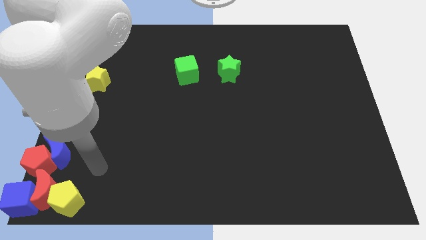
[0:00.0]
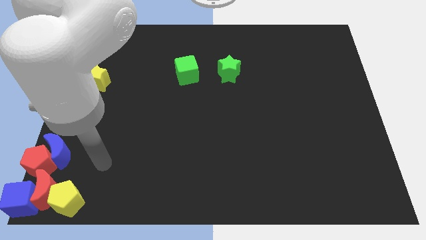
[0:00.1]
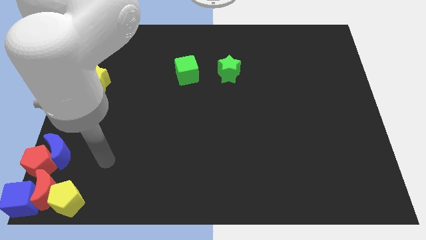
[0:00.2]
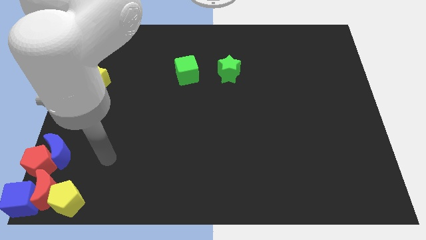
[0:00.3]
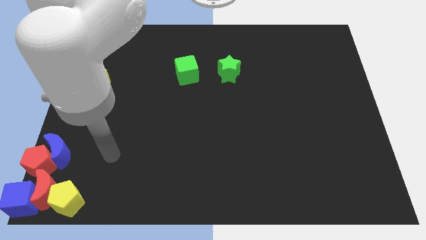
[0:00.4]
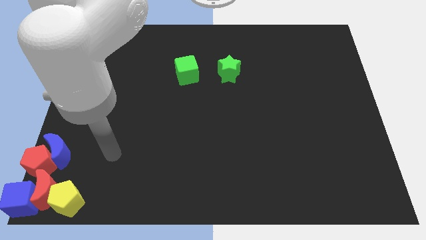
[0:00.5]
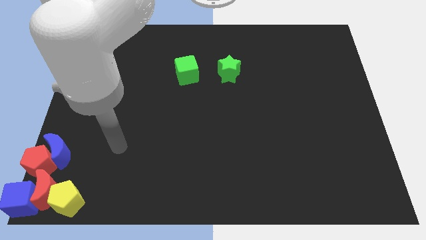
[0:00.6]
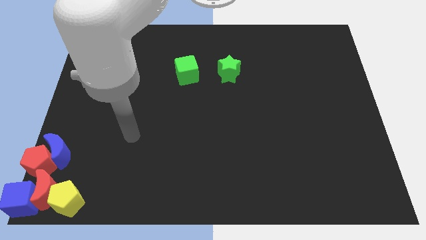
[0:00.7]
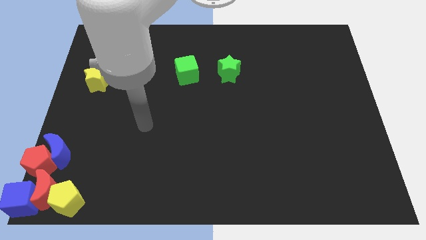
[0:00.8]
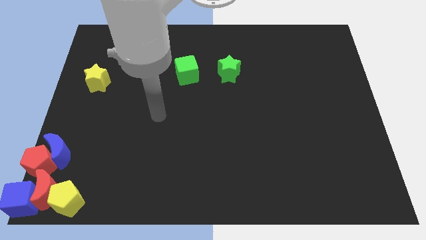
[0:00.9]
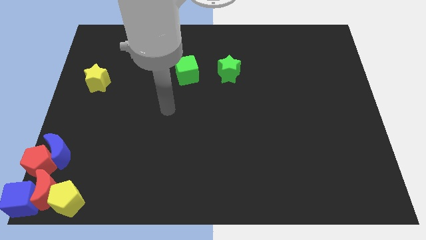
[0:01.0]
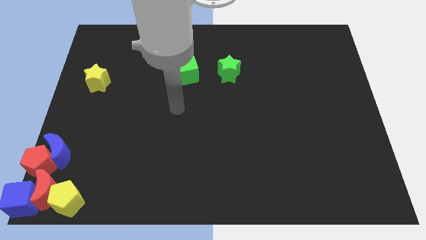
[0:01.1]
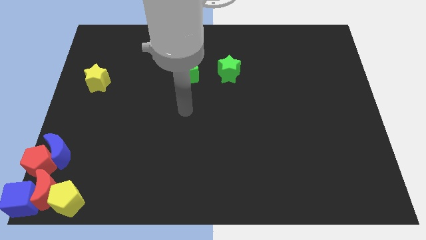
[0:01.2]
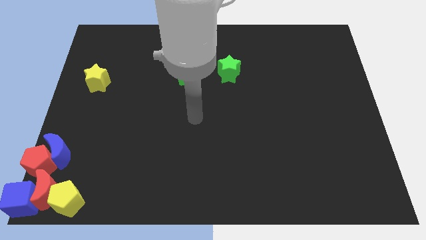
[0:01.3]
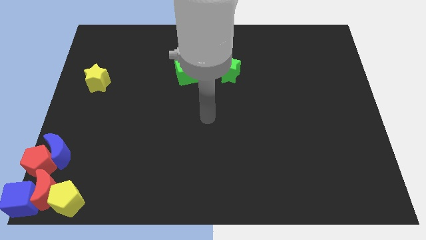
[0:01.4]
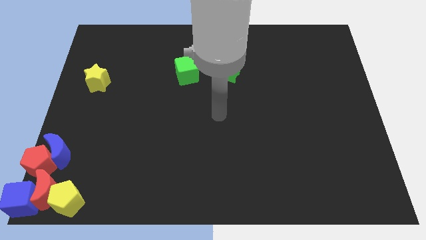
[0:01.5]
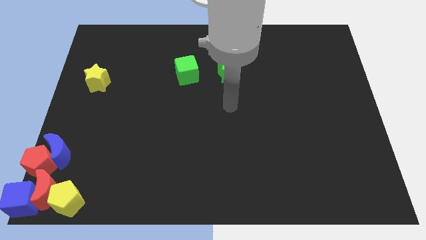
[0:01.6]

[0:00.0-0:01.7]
move your arm to the bottom of the green star

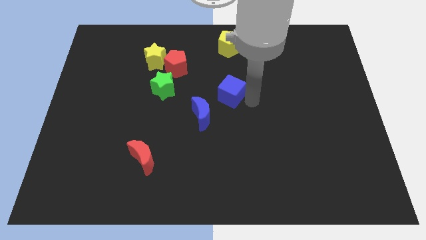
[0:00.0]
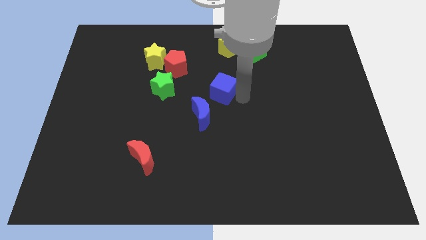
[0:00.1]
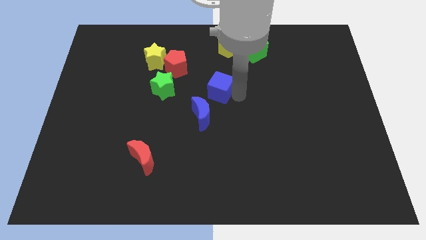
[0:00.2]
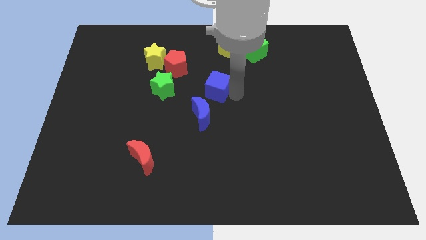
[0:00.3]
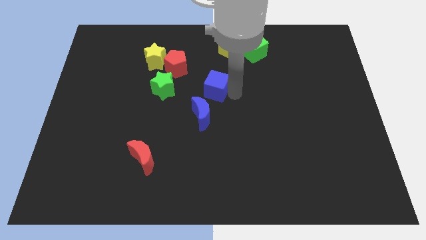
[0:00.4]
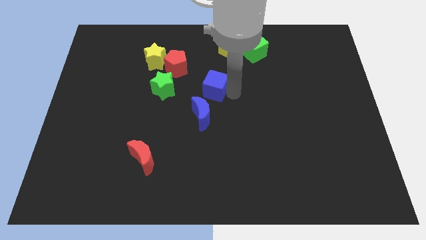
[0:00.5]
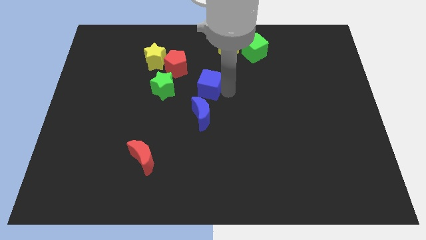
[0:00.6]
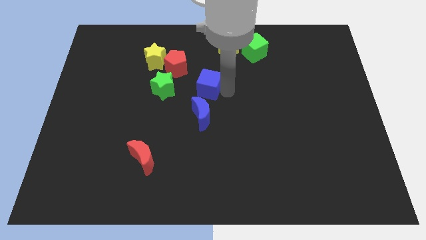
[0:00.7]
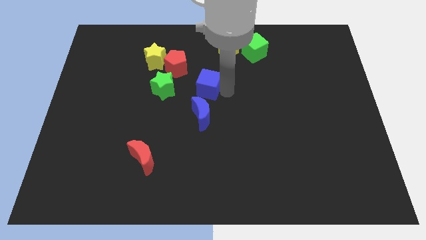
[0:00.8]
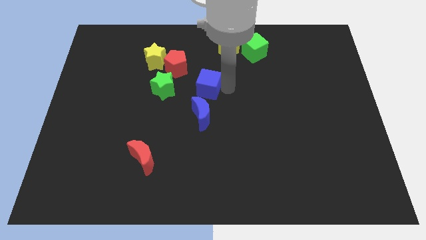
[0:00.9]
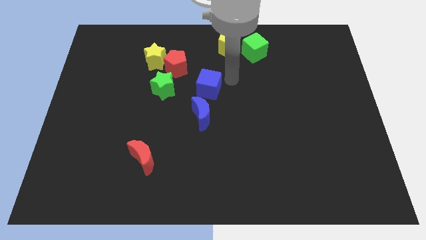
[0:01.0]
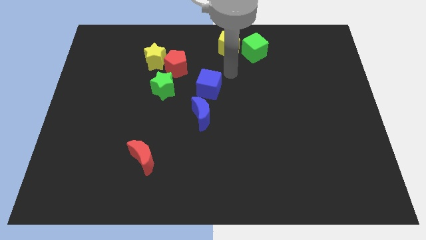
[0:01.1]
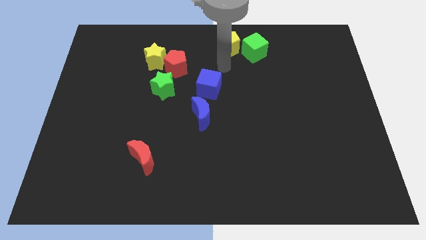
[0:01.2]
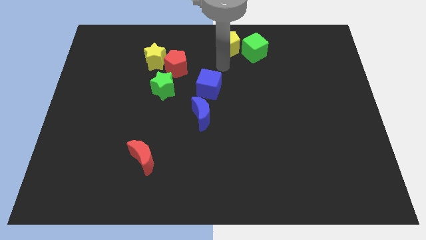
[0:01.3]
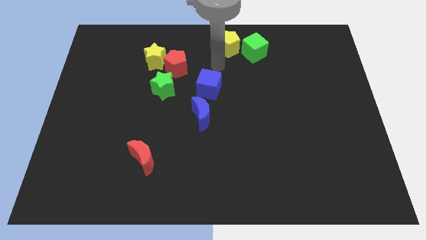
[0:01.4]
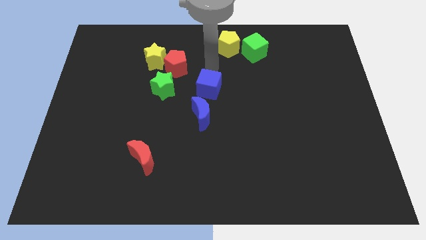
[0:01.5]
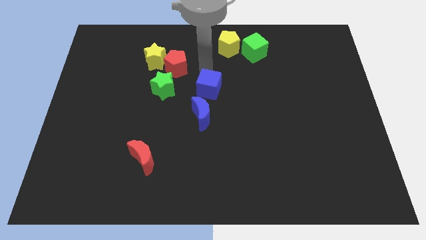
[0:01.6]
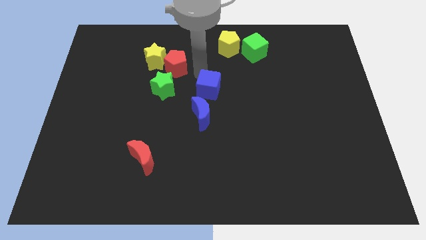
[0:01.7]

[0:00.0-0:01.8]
push blue cube above blue crescent

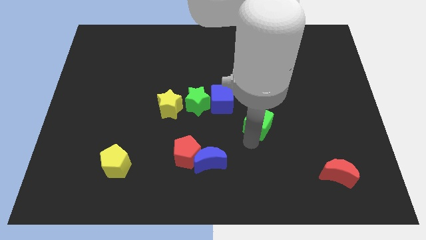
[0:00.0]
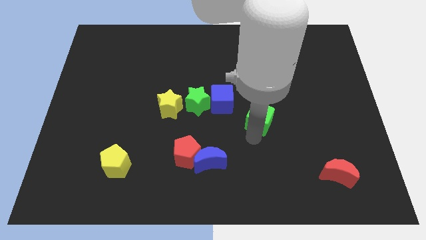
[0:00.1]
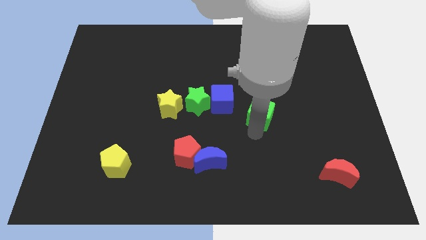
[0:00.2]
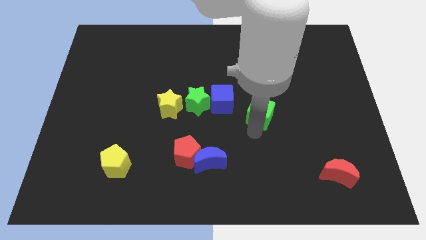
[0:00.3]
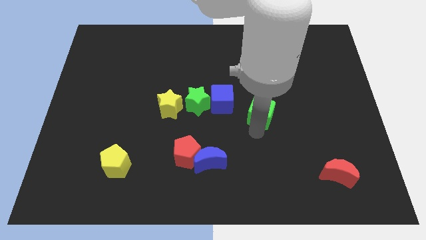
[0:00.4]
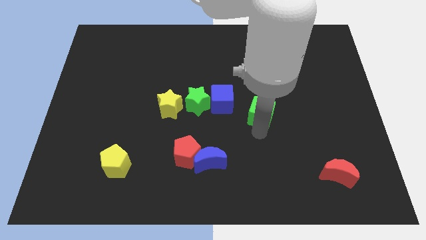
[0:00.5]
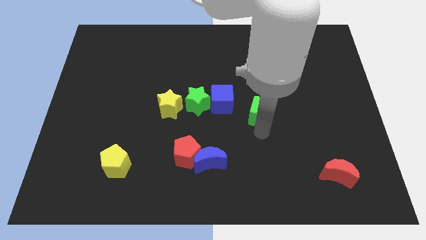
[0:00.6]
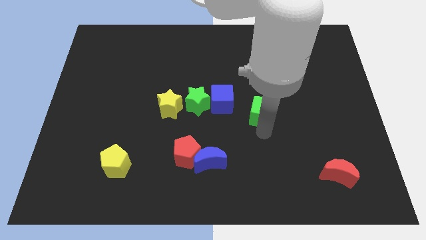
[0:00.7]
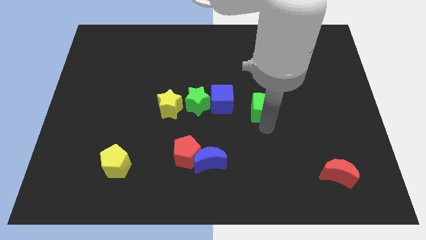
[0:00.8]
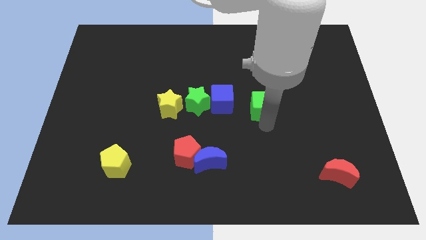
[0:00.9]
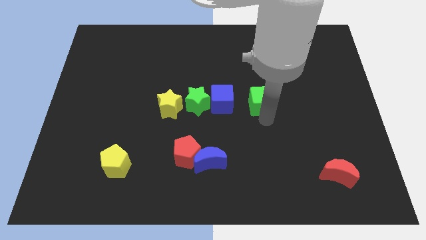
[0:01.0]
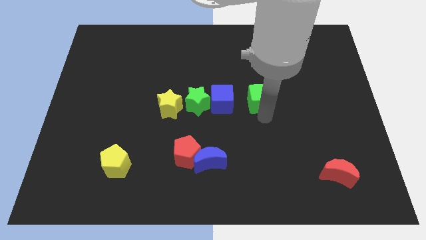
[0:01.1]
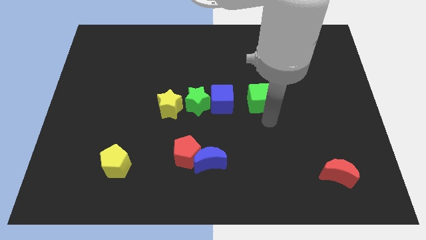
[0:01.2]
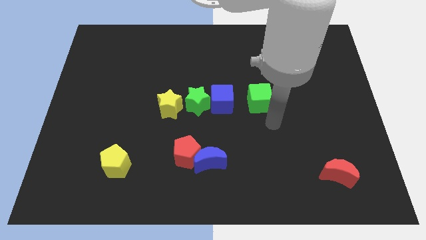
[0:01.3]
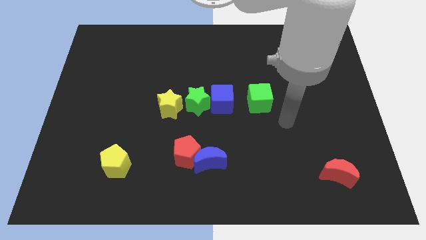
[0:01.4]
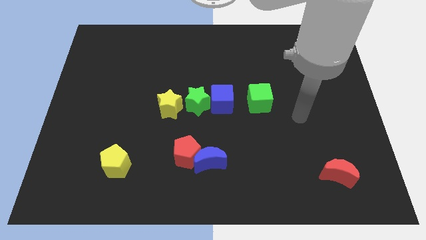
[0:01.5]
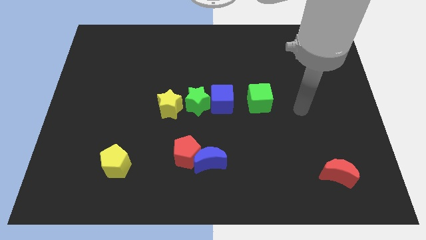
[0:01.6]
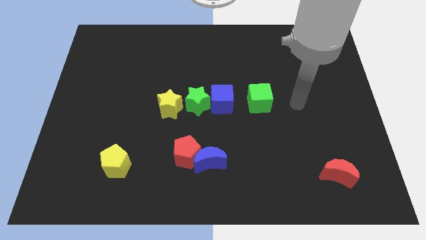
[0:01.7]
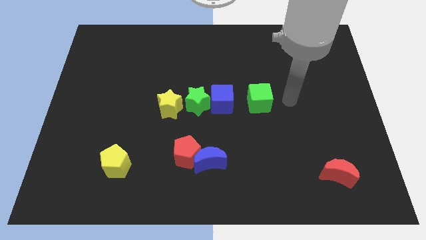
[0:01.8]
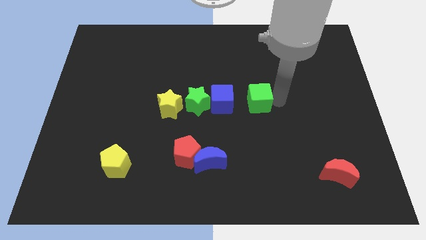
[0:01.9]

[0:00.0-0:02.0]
move the green cube to the right of the blue cube

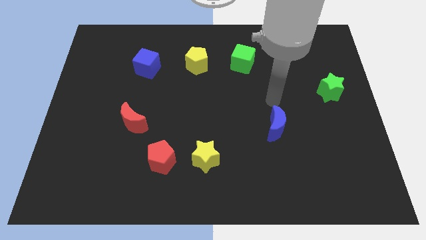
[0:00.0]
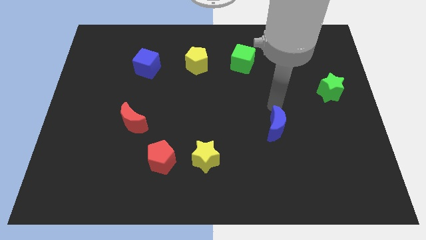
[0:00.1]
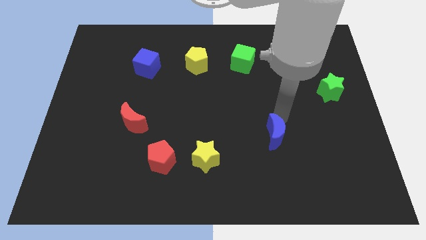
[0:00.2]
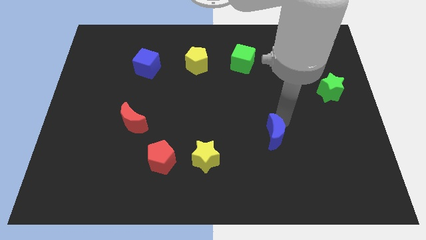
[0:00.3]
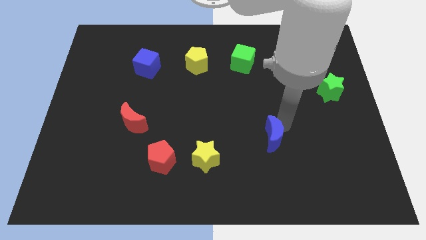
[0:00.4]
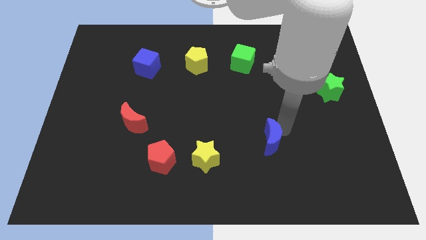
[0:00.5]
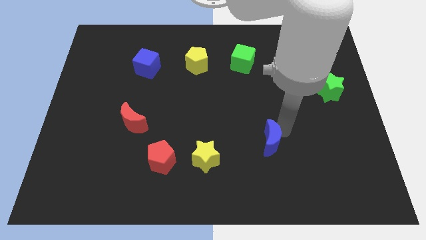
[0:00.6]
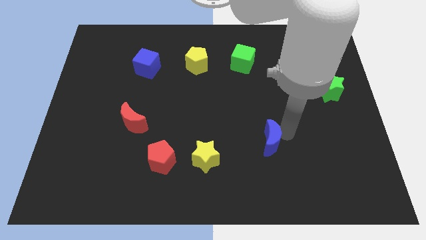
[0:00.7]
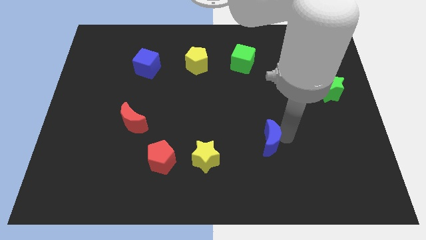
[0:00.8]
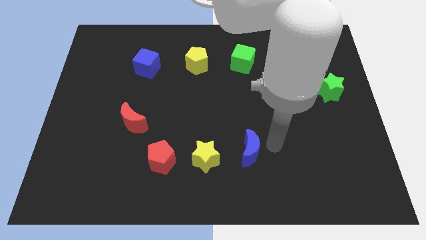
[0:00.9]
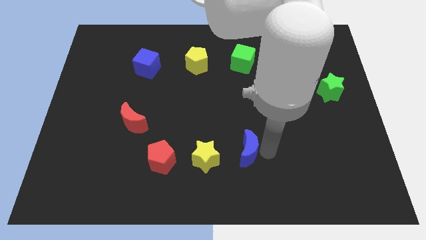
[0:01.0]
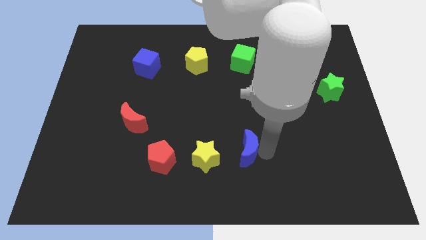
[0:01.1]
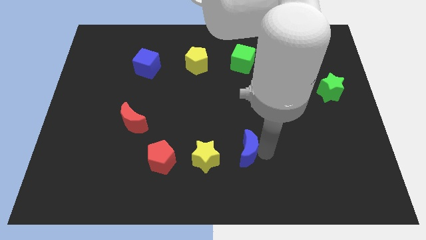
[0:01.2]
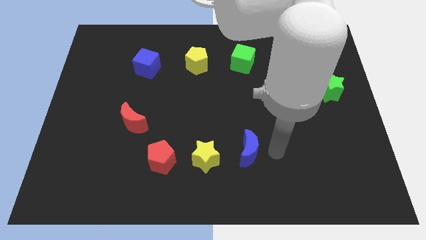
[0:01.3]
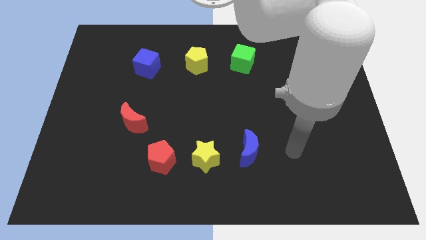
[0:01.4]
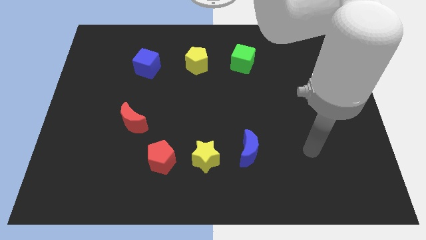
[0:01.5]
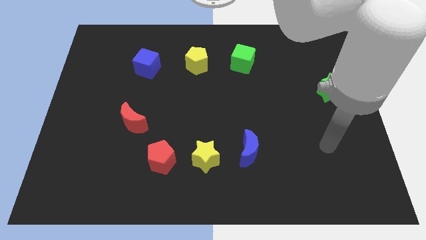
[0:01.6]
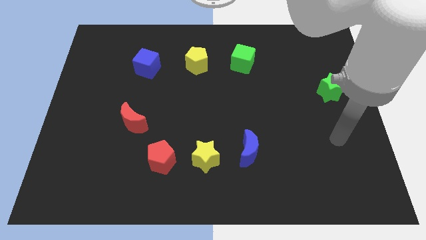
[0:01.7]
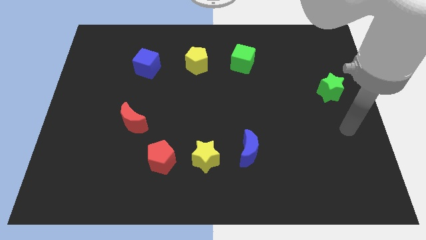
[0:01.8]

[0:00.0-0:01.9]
move the blue crescent close to the yellow star

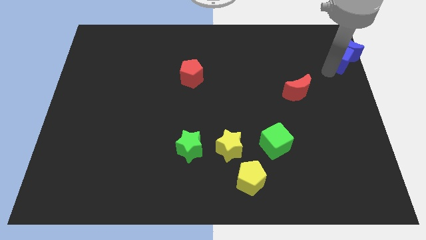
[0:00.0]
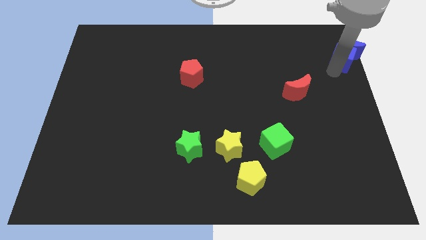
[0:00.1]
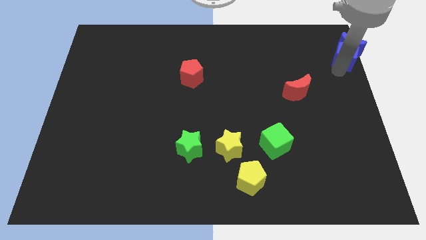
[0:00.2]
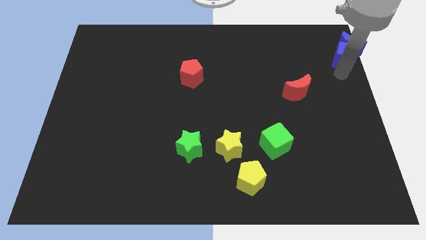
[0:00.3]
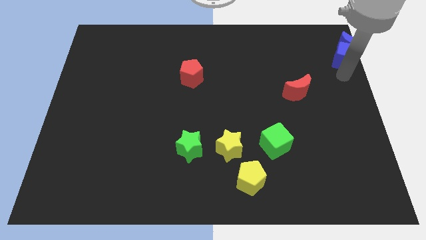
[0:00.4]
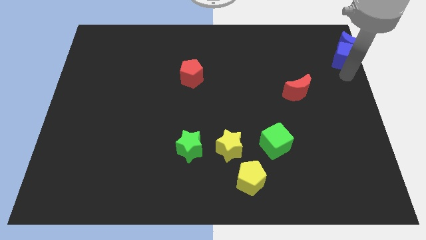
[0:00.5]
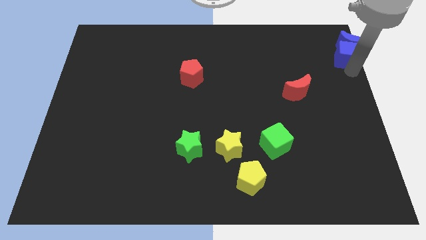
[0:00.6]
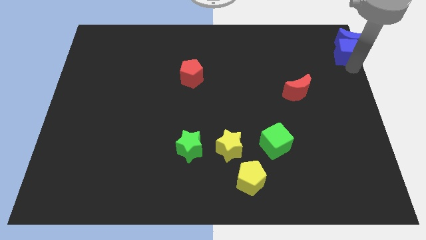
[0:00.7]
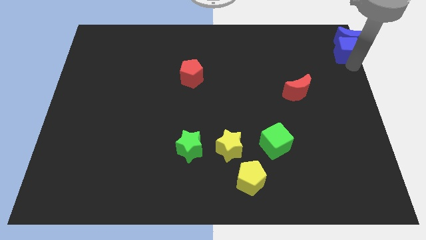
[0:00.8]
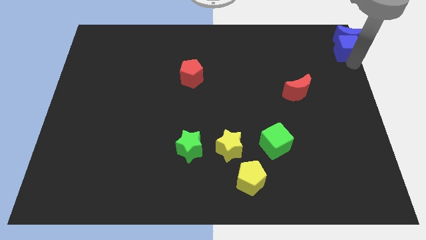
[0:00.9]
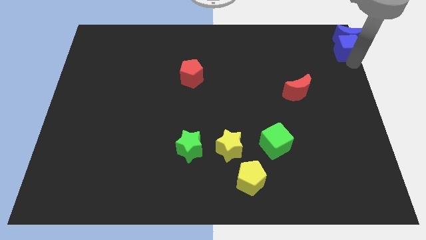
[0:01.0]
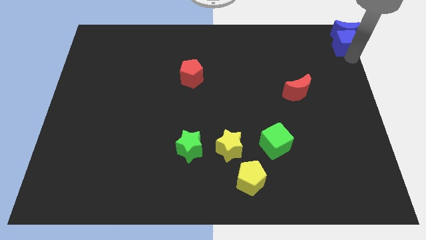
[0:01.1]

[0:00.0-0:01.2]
move blue blocks to top right corner

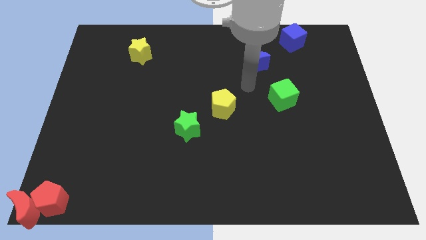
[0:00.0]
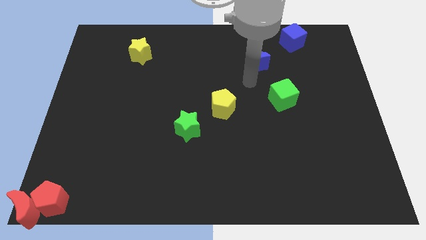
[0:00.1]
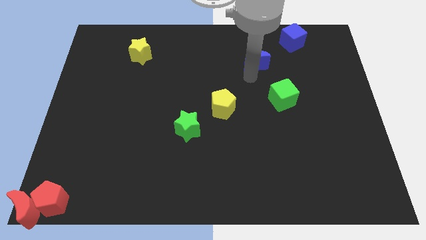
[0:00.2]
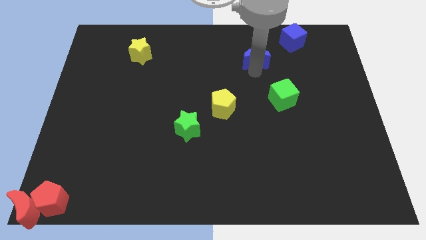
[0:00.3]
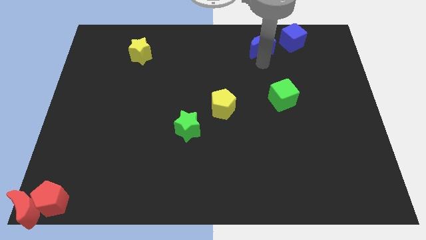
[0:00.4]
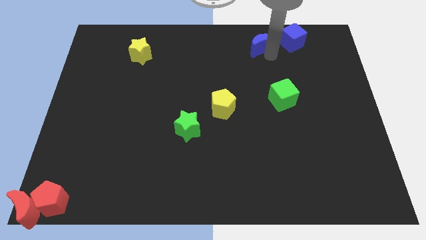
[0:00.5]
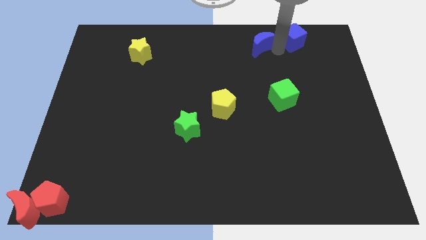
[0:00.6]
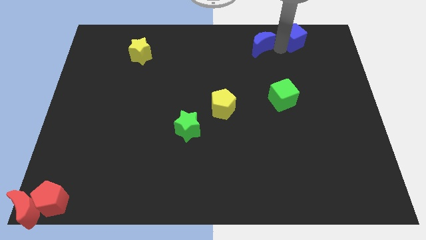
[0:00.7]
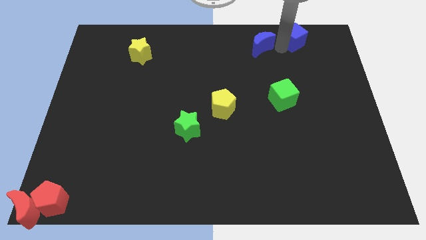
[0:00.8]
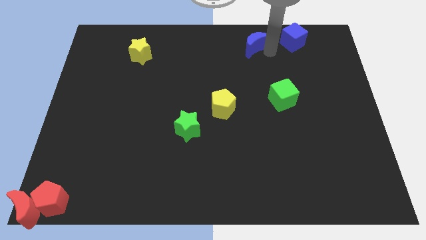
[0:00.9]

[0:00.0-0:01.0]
move the blue crescent to the left of the blue cube
